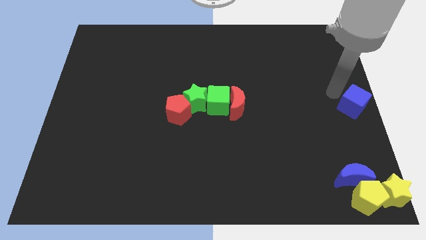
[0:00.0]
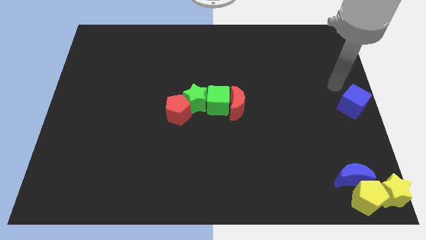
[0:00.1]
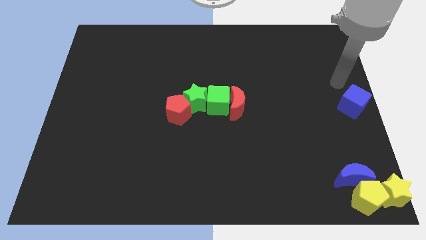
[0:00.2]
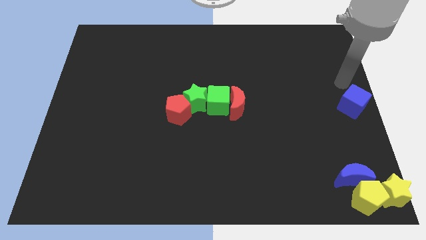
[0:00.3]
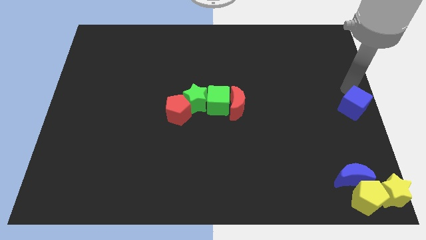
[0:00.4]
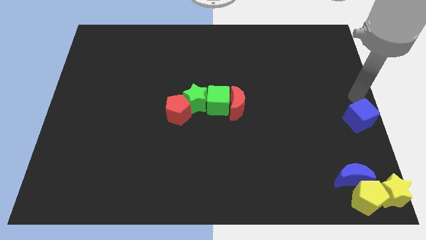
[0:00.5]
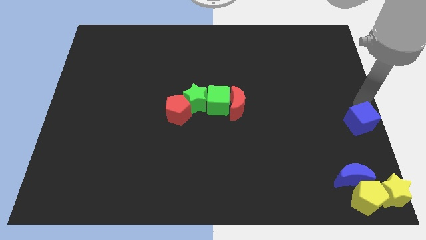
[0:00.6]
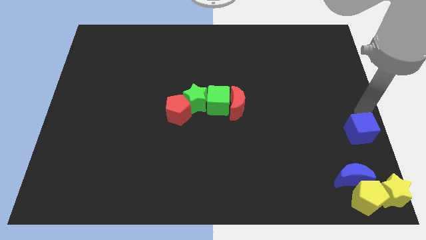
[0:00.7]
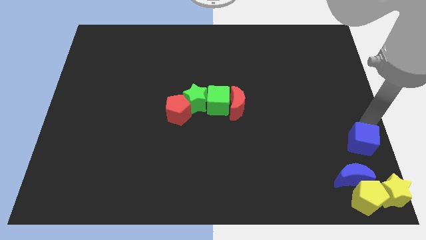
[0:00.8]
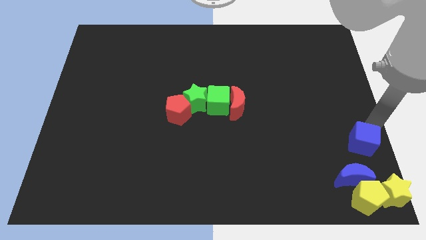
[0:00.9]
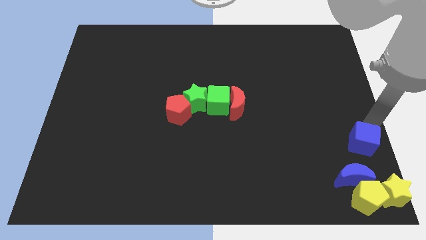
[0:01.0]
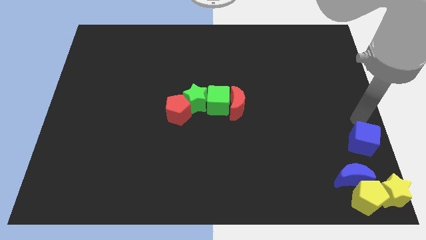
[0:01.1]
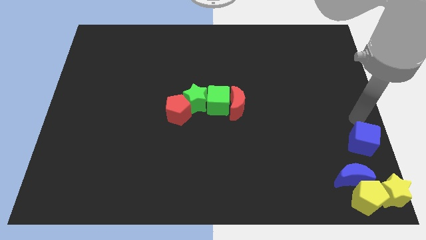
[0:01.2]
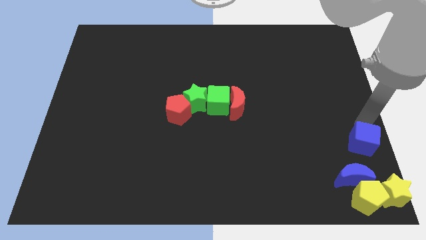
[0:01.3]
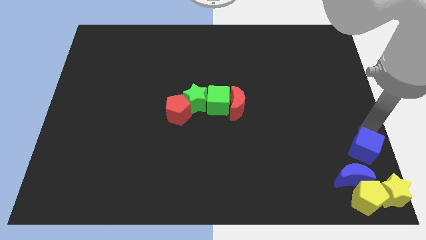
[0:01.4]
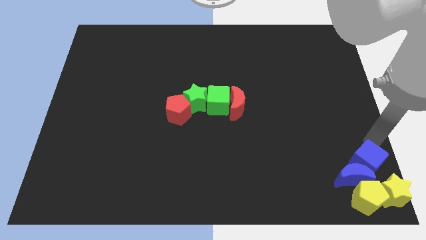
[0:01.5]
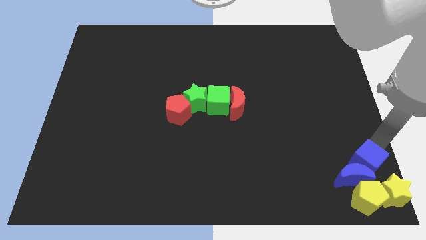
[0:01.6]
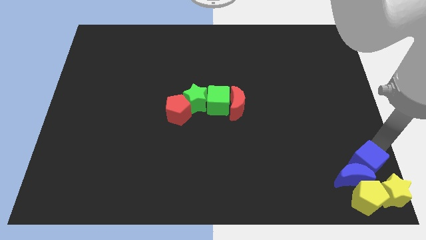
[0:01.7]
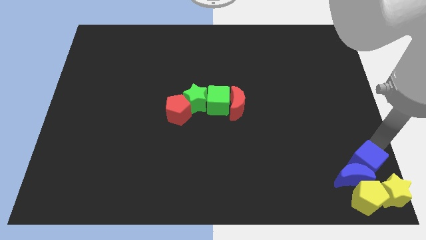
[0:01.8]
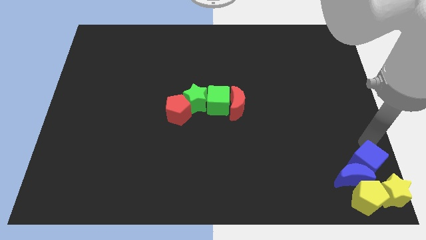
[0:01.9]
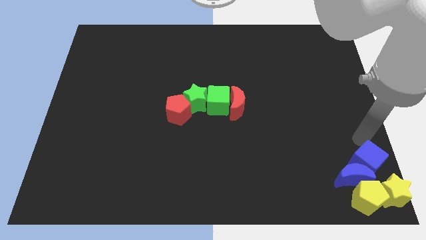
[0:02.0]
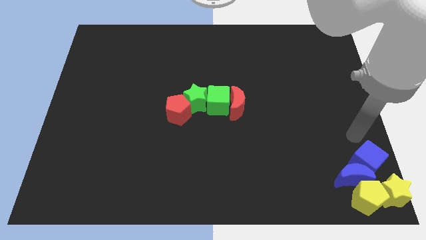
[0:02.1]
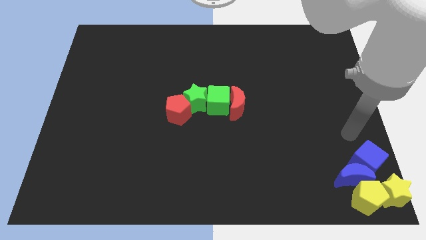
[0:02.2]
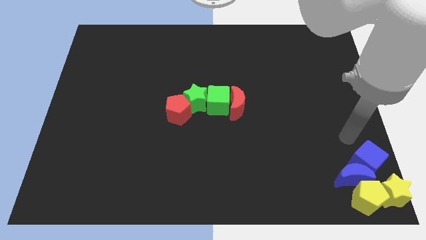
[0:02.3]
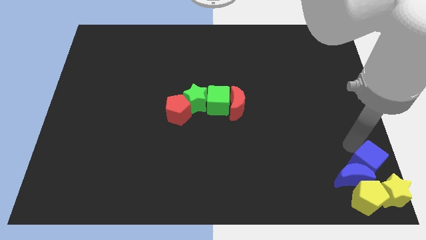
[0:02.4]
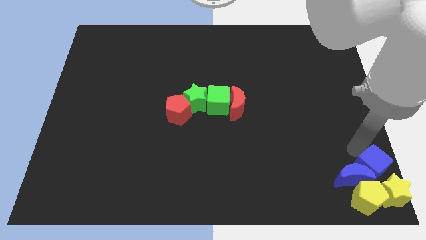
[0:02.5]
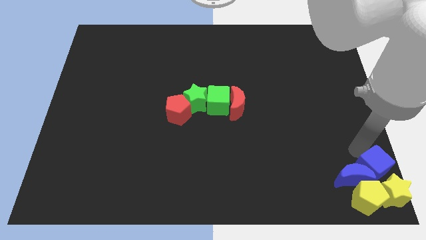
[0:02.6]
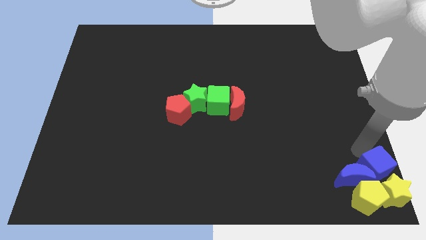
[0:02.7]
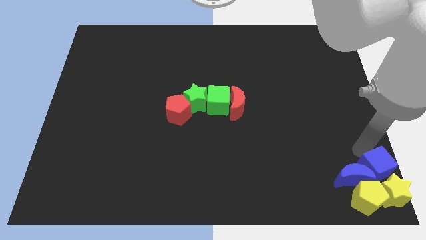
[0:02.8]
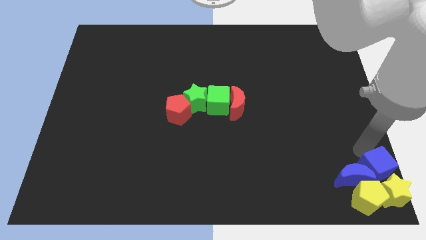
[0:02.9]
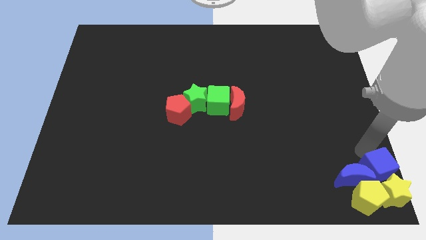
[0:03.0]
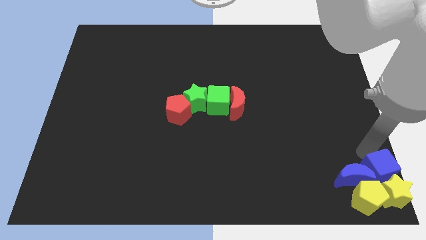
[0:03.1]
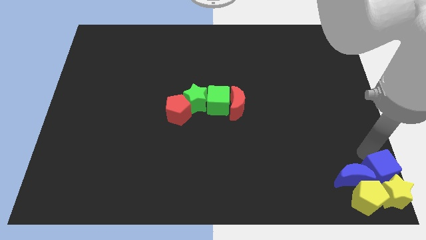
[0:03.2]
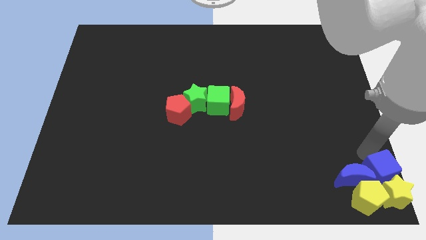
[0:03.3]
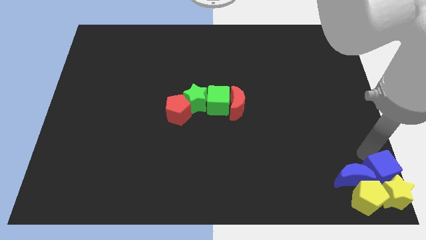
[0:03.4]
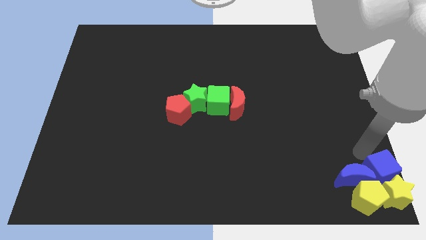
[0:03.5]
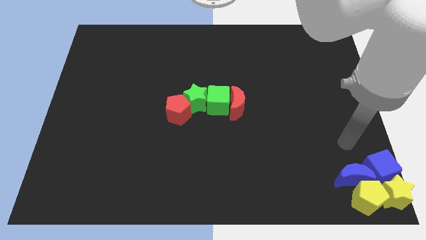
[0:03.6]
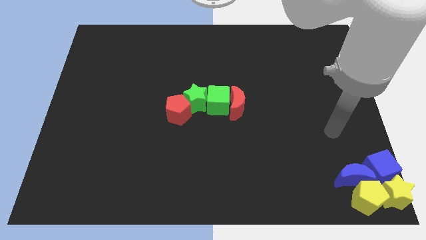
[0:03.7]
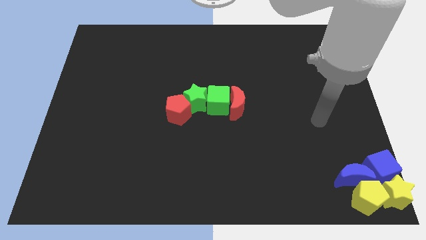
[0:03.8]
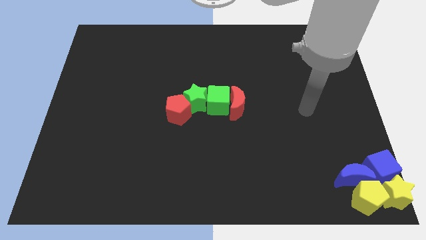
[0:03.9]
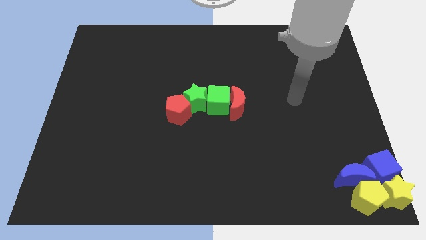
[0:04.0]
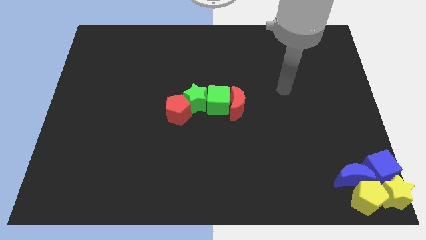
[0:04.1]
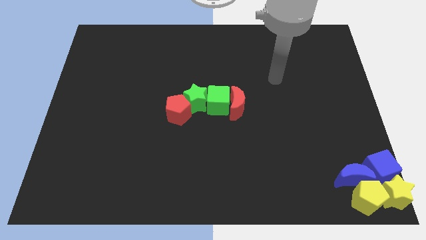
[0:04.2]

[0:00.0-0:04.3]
push the blue cube into the top of the yellow star

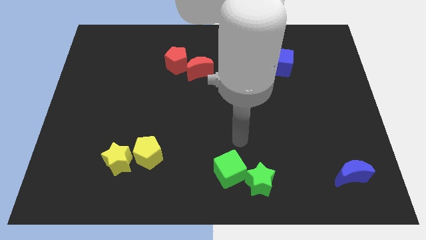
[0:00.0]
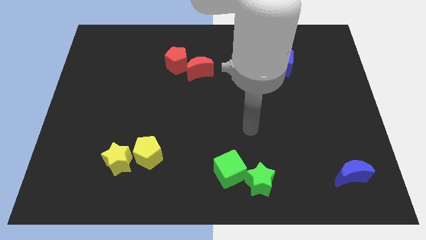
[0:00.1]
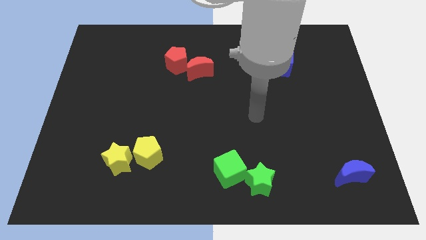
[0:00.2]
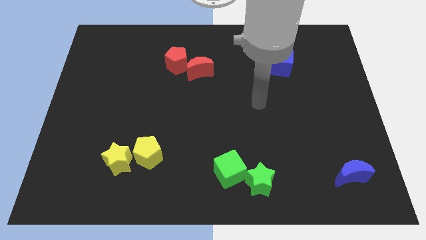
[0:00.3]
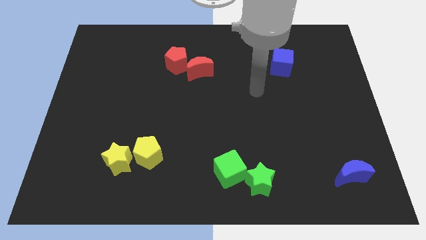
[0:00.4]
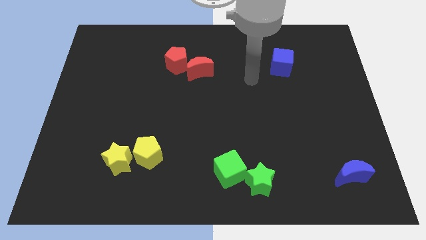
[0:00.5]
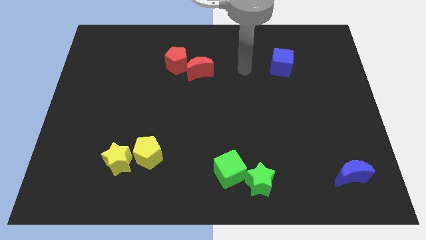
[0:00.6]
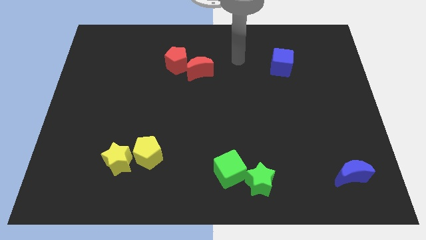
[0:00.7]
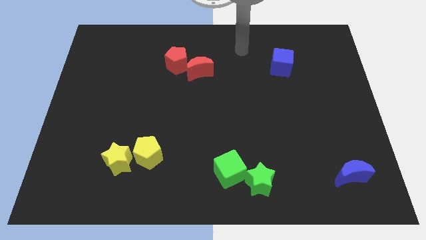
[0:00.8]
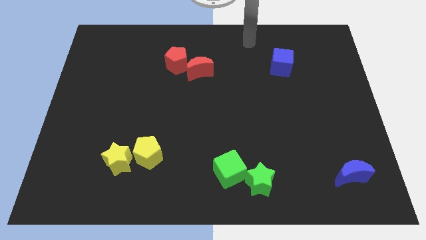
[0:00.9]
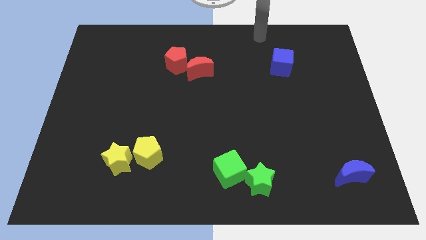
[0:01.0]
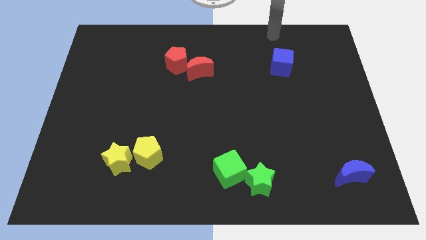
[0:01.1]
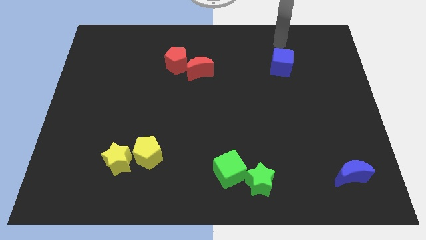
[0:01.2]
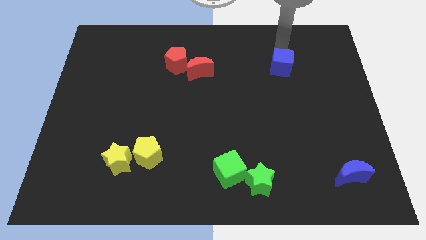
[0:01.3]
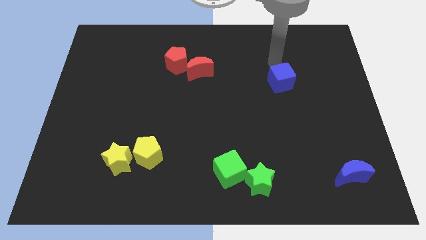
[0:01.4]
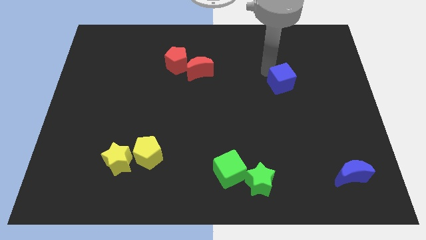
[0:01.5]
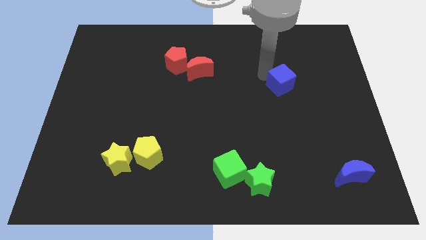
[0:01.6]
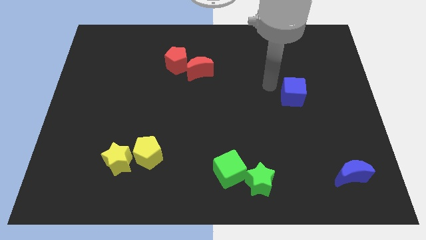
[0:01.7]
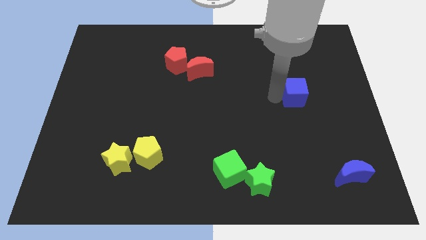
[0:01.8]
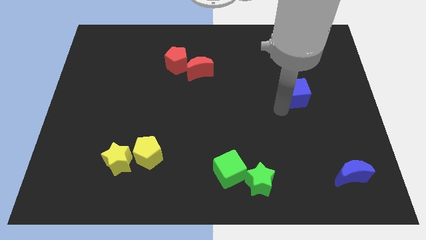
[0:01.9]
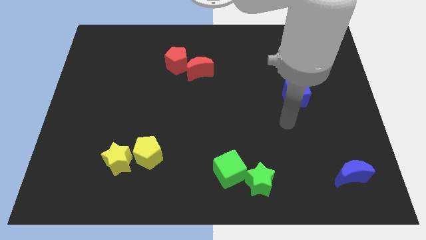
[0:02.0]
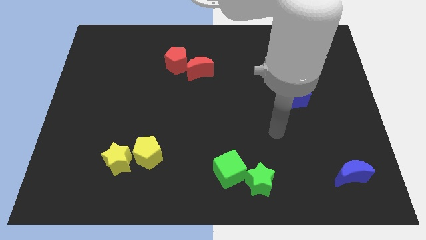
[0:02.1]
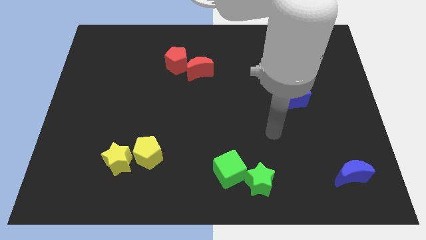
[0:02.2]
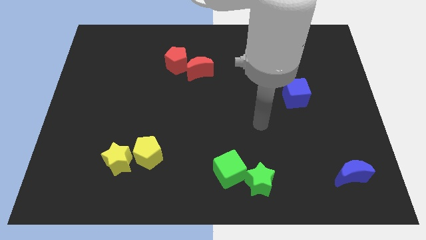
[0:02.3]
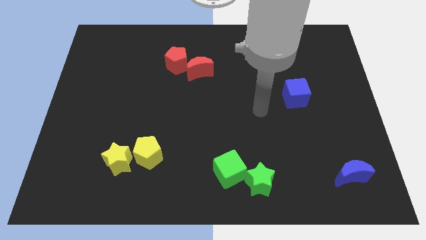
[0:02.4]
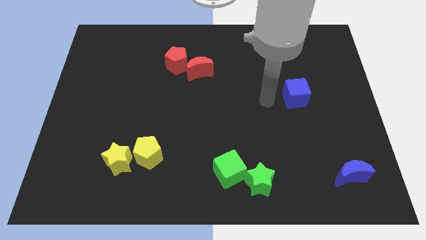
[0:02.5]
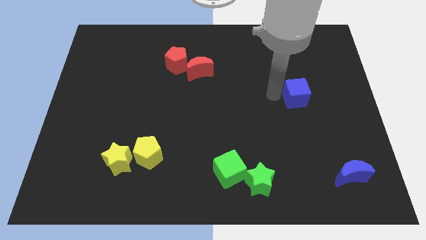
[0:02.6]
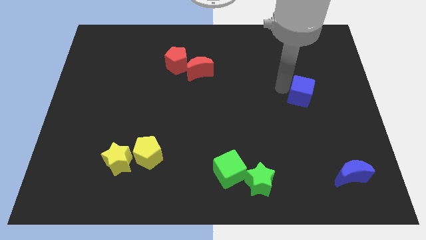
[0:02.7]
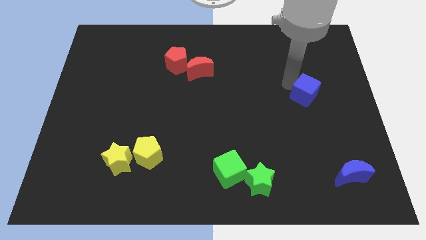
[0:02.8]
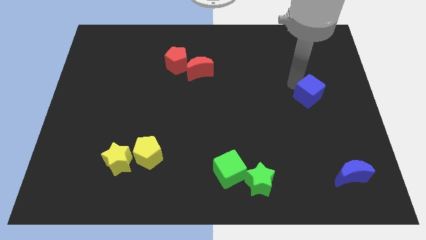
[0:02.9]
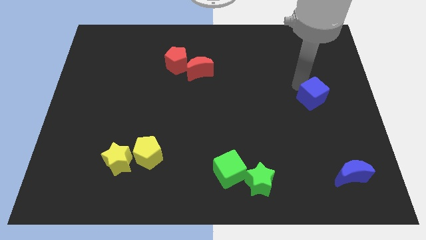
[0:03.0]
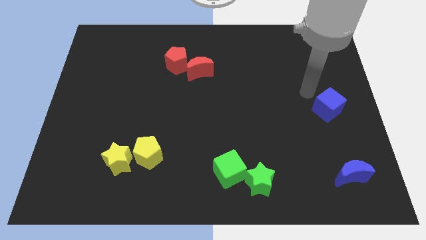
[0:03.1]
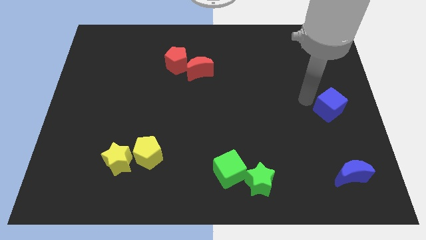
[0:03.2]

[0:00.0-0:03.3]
slide the blue cube towards the top side of the blue crescent

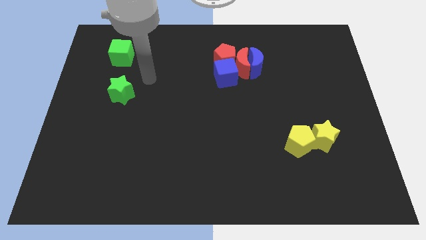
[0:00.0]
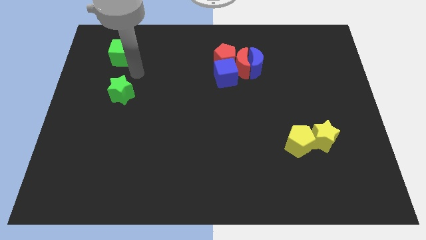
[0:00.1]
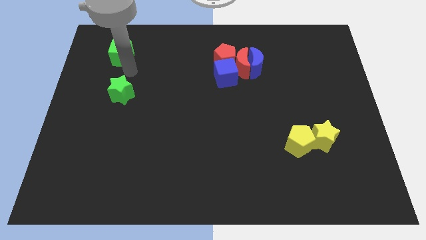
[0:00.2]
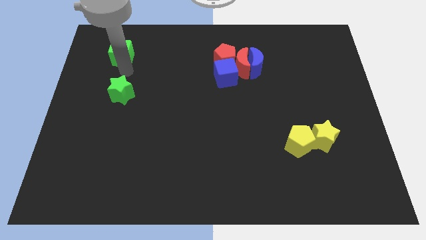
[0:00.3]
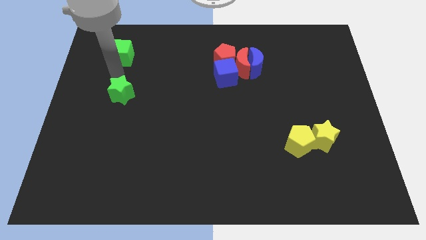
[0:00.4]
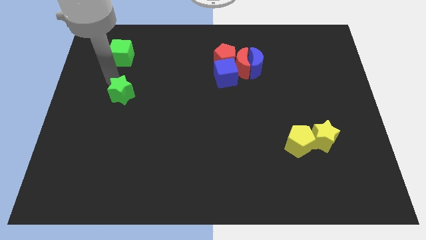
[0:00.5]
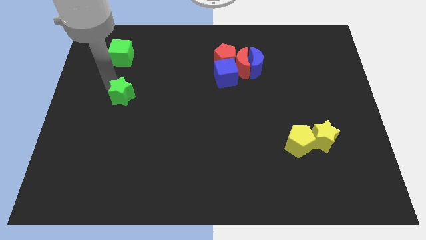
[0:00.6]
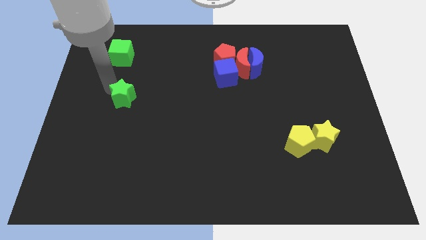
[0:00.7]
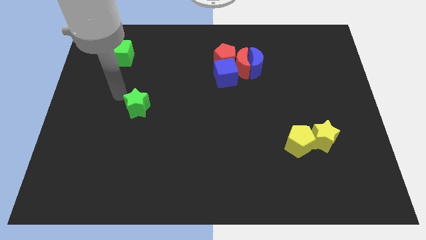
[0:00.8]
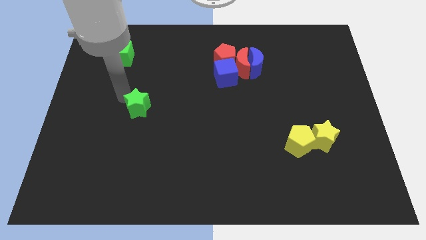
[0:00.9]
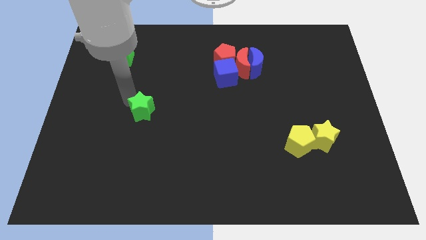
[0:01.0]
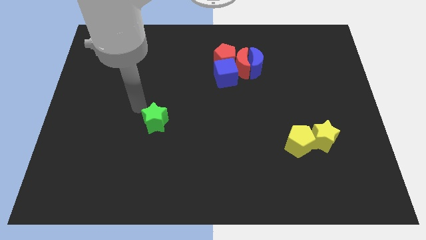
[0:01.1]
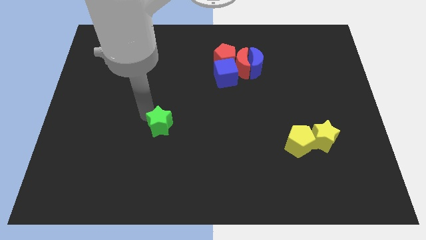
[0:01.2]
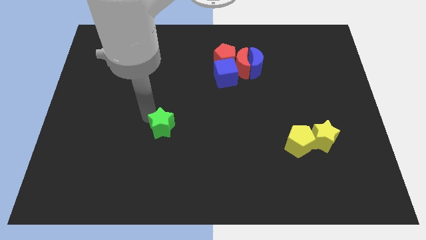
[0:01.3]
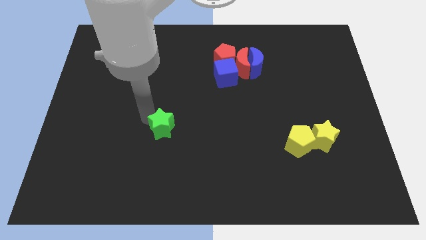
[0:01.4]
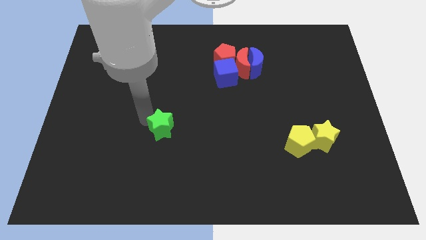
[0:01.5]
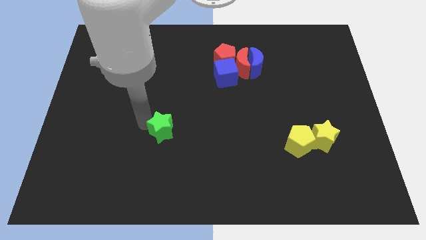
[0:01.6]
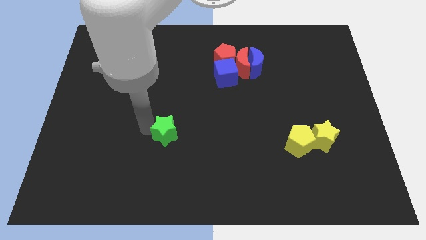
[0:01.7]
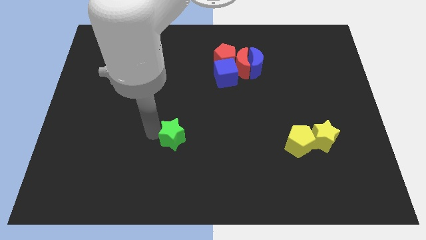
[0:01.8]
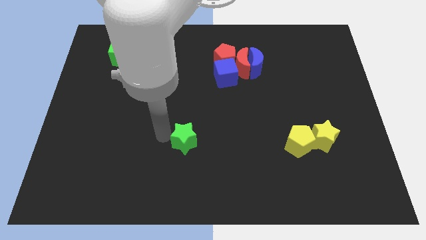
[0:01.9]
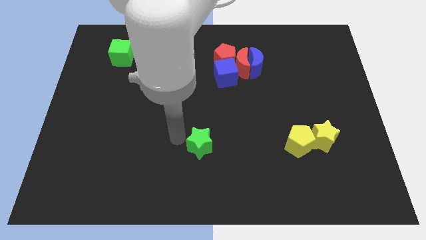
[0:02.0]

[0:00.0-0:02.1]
push the green star towards the bottom center of the board
